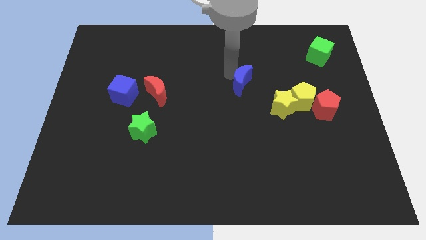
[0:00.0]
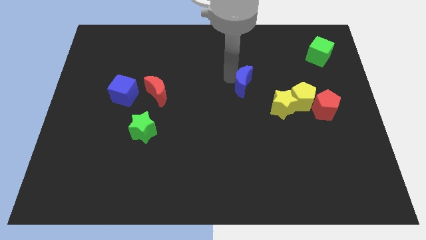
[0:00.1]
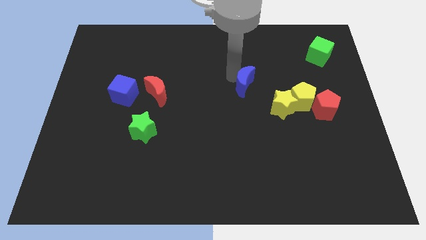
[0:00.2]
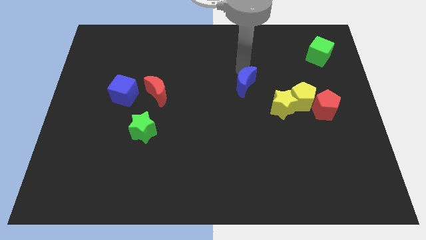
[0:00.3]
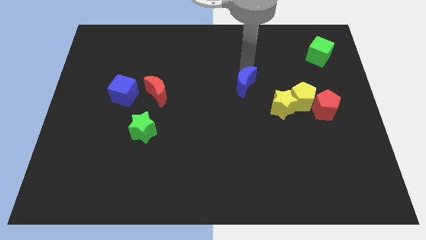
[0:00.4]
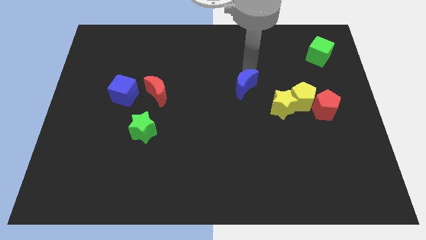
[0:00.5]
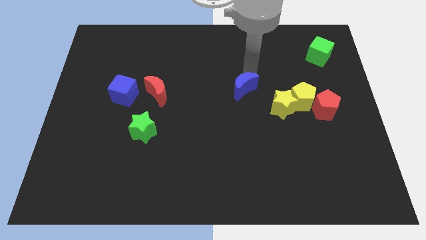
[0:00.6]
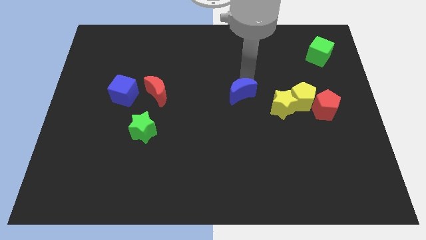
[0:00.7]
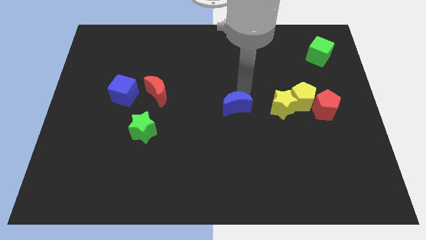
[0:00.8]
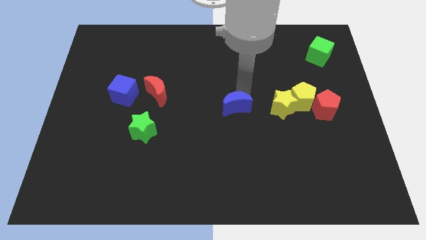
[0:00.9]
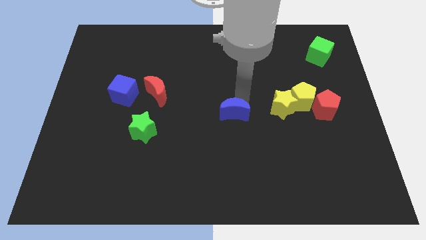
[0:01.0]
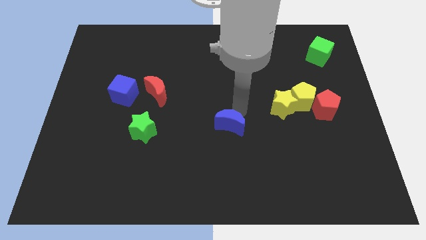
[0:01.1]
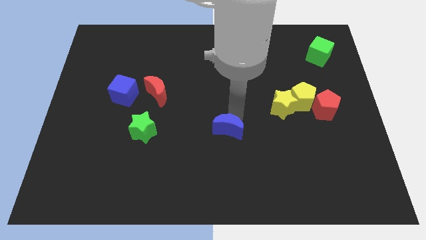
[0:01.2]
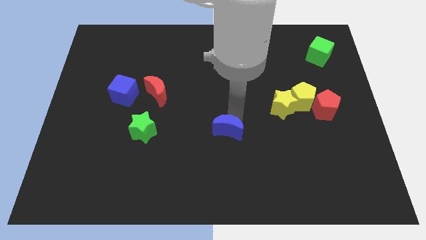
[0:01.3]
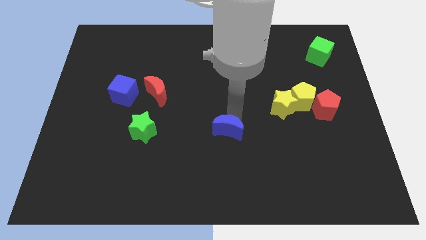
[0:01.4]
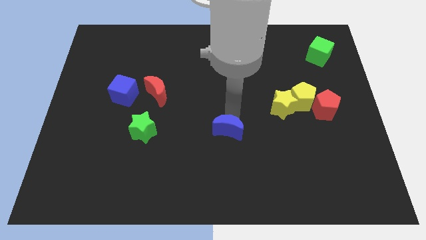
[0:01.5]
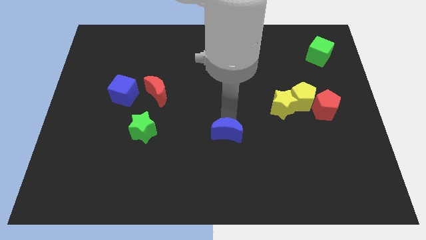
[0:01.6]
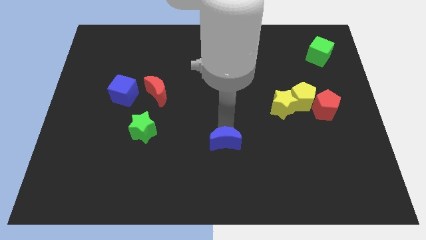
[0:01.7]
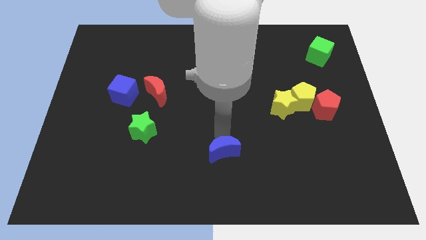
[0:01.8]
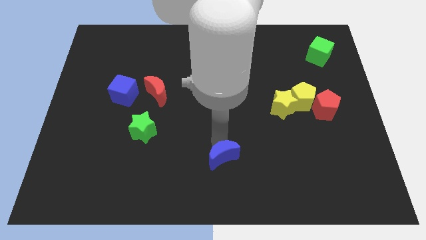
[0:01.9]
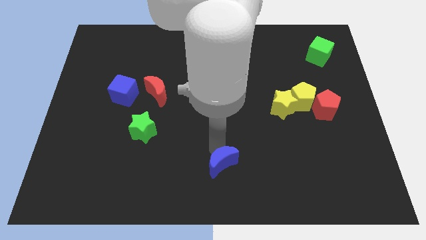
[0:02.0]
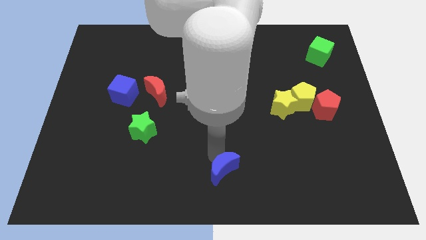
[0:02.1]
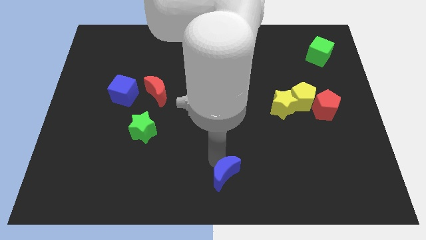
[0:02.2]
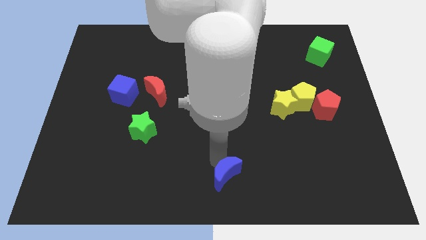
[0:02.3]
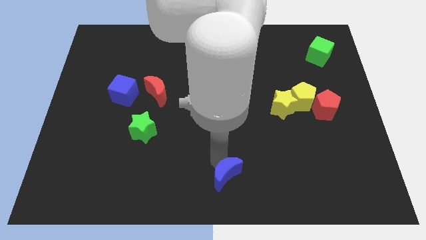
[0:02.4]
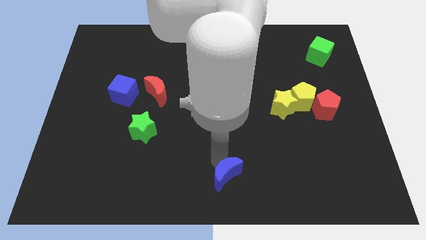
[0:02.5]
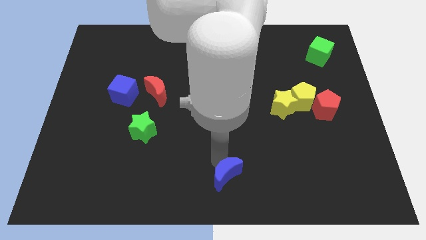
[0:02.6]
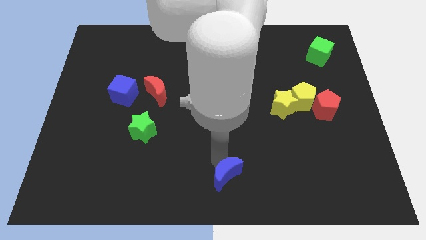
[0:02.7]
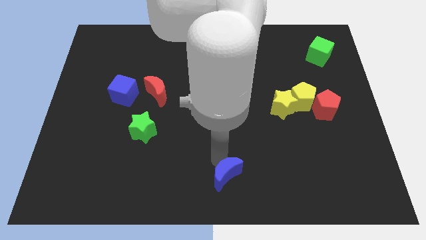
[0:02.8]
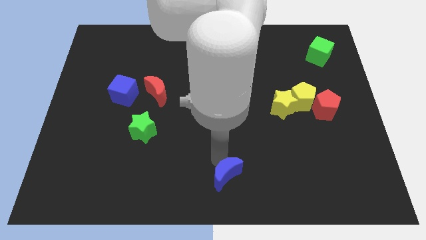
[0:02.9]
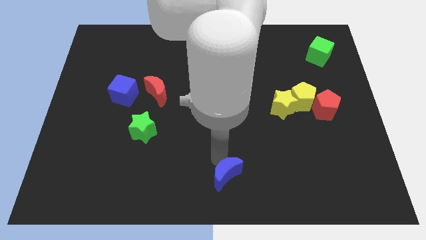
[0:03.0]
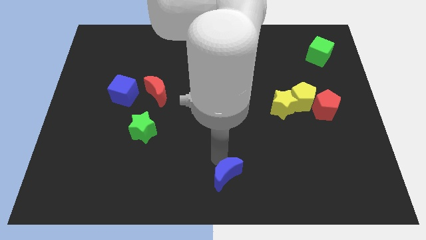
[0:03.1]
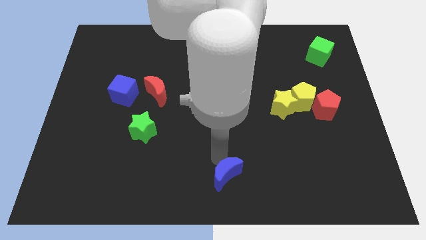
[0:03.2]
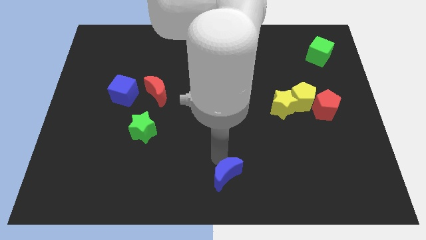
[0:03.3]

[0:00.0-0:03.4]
push the blue moon to the bottom center

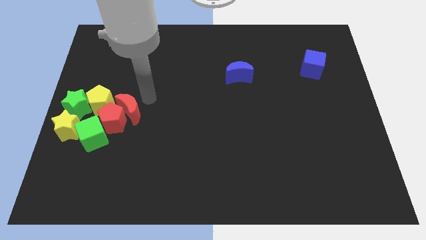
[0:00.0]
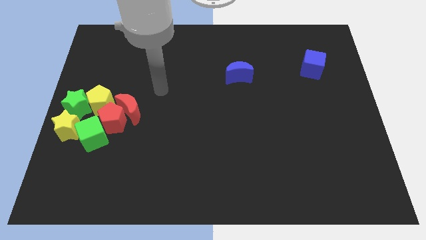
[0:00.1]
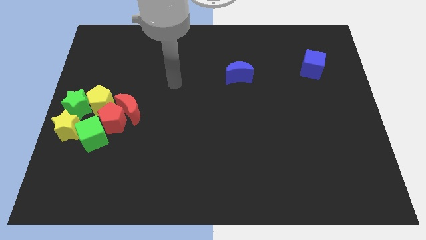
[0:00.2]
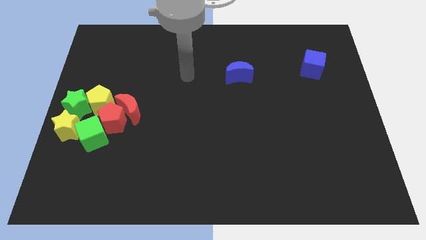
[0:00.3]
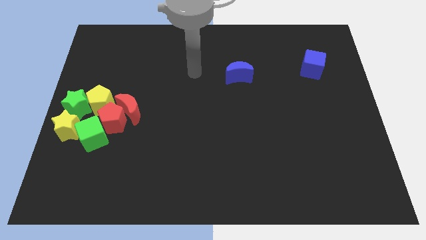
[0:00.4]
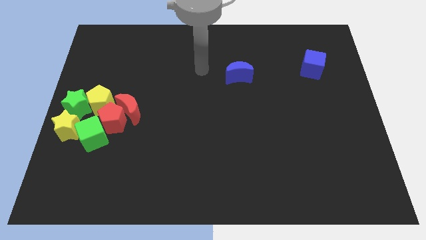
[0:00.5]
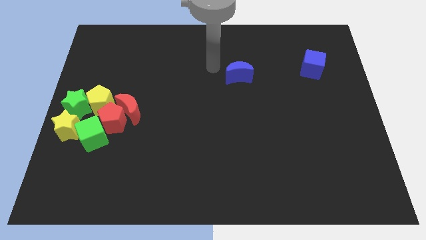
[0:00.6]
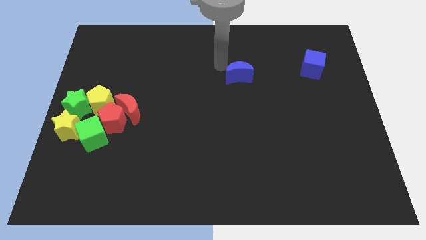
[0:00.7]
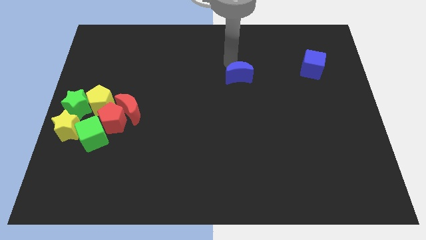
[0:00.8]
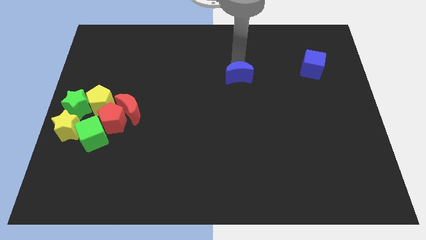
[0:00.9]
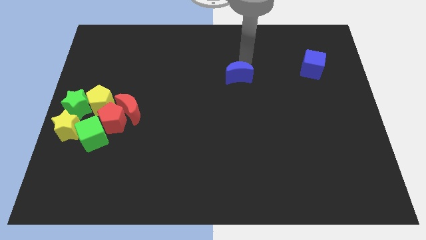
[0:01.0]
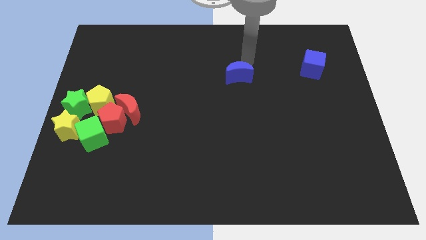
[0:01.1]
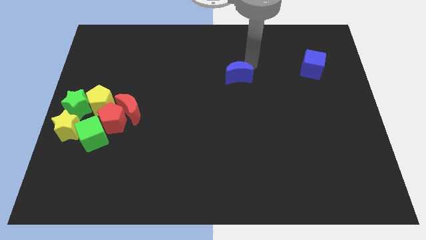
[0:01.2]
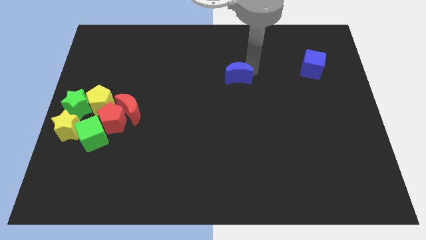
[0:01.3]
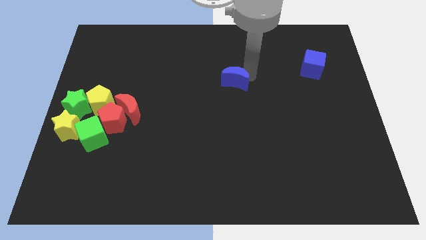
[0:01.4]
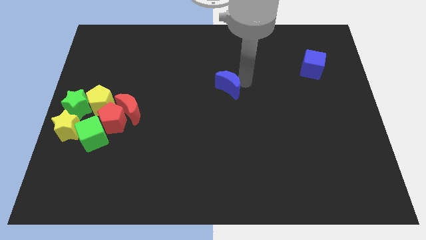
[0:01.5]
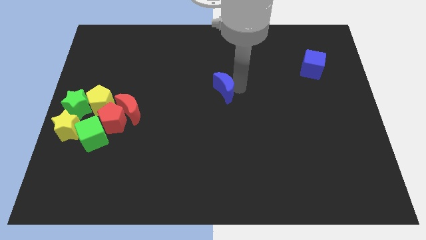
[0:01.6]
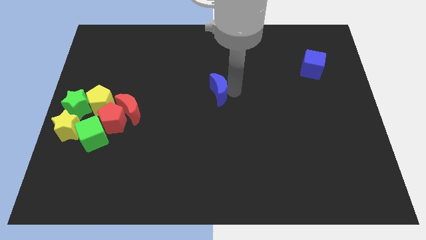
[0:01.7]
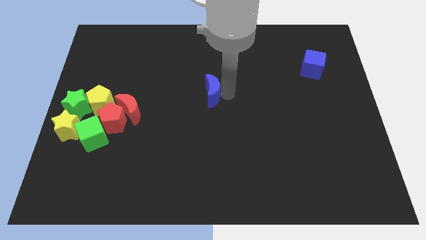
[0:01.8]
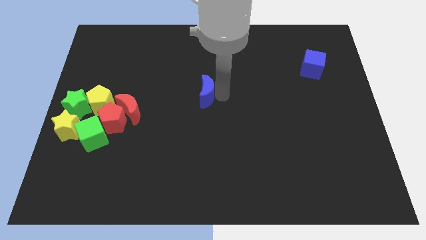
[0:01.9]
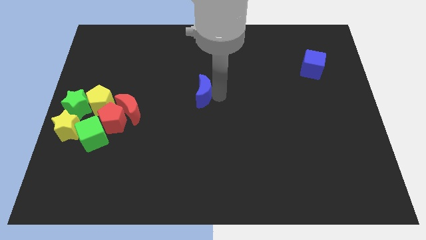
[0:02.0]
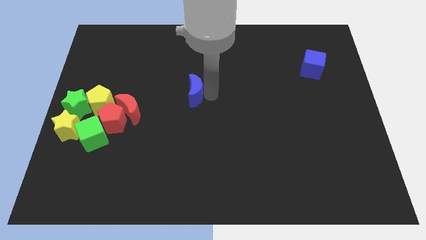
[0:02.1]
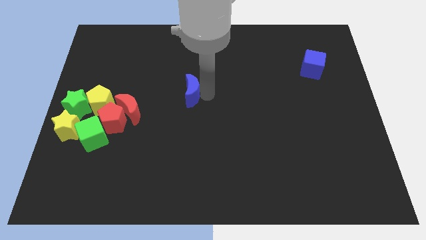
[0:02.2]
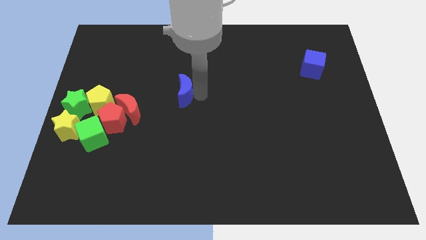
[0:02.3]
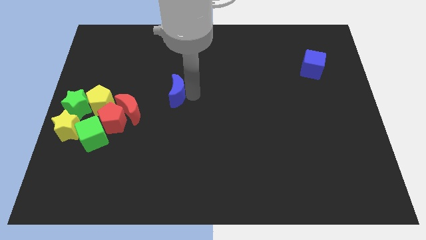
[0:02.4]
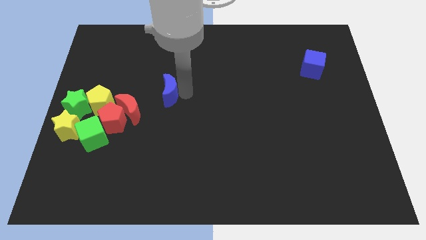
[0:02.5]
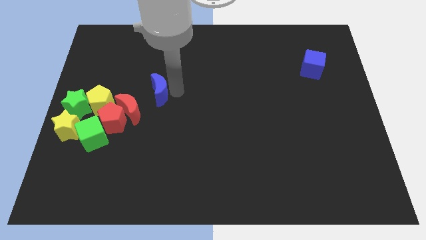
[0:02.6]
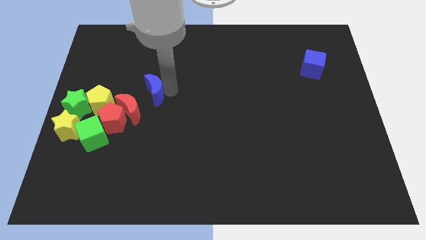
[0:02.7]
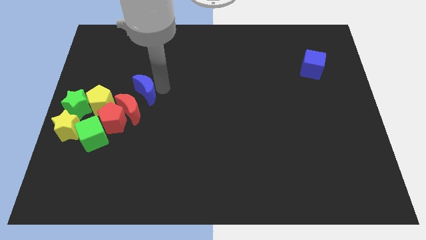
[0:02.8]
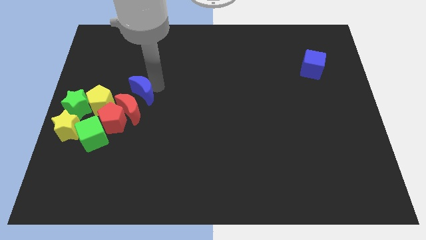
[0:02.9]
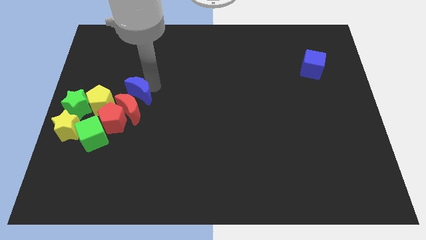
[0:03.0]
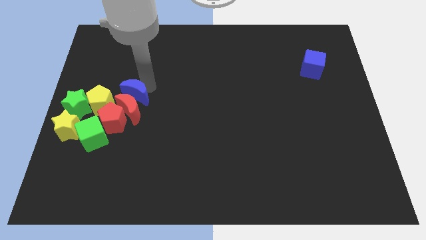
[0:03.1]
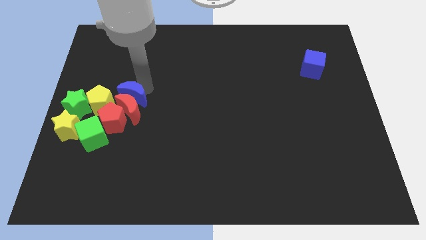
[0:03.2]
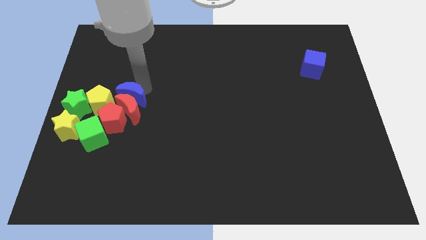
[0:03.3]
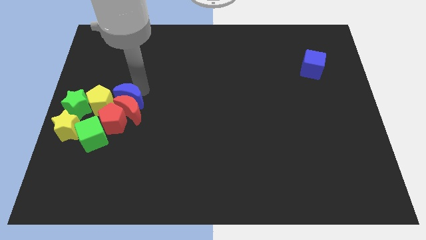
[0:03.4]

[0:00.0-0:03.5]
push the blue crescent to the top of the red crescent

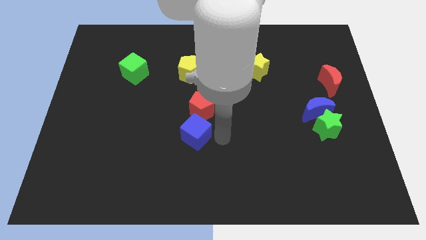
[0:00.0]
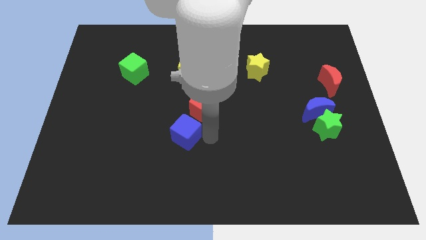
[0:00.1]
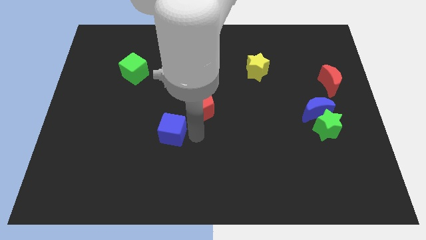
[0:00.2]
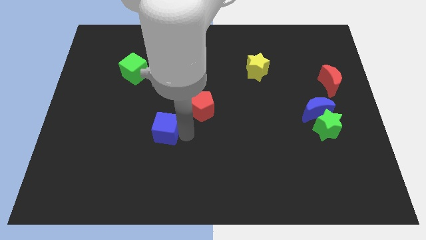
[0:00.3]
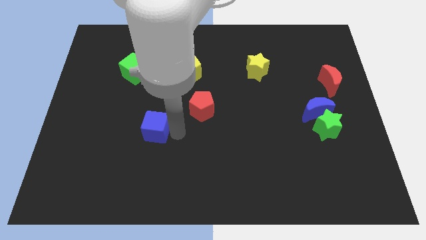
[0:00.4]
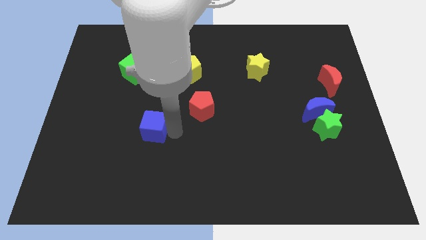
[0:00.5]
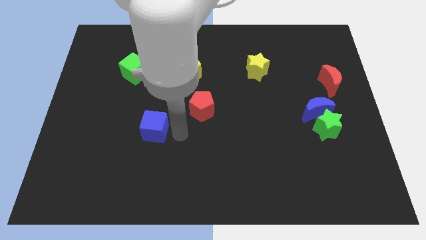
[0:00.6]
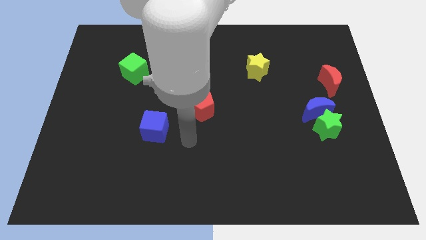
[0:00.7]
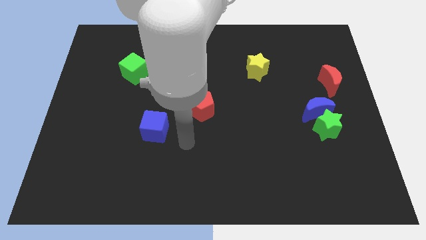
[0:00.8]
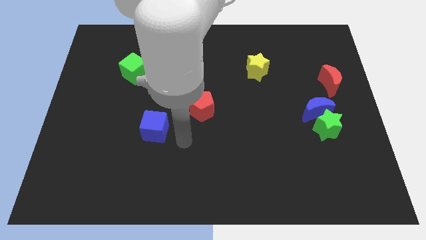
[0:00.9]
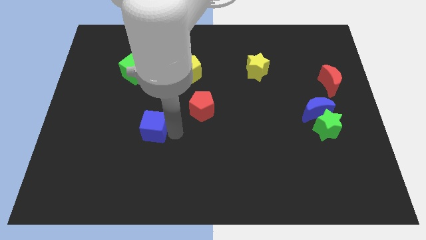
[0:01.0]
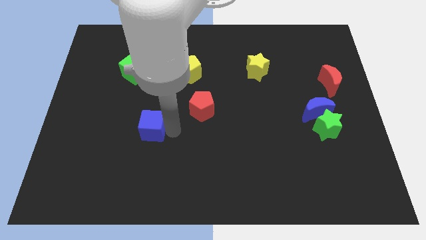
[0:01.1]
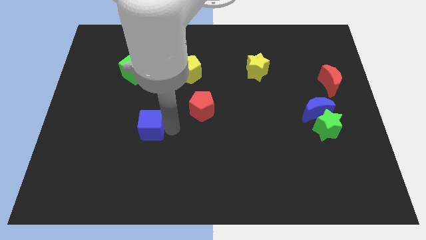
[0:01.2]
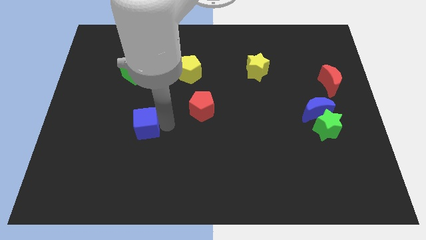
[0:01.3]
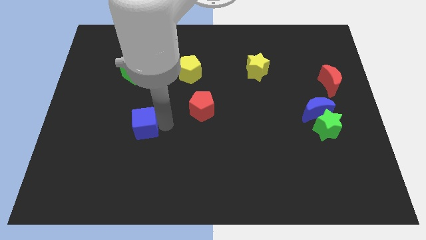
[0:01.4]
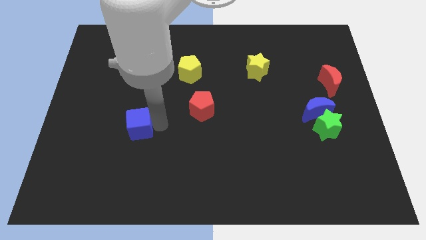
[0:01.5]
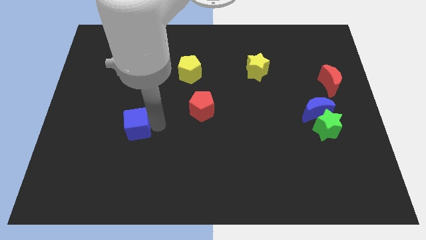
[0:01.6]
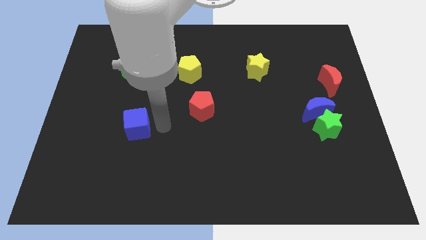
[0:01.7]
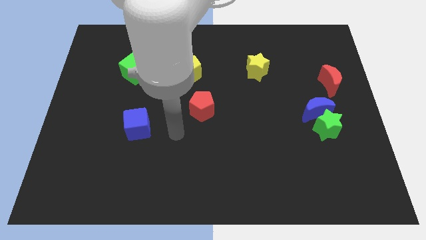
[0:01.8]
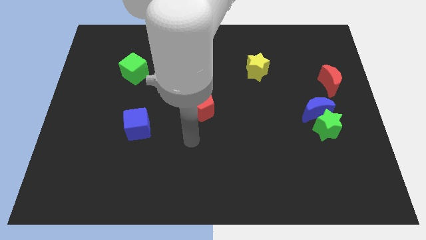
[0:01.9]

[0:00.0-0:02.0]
move the blue cube parallel to the left of the red pentagon
